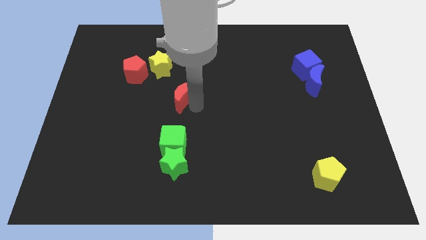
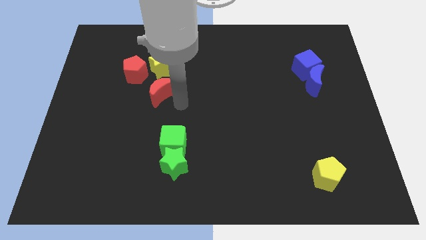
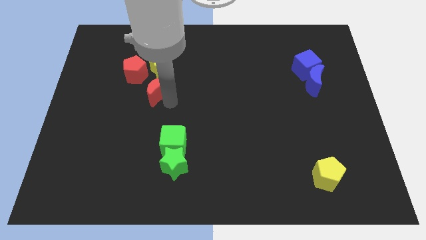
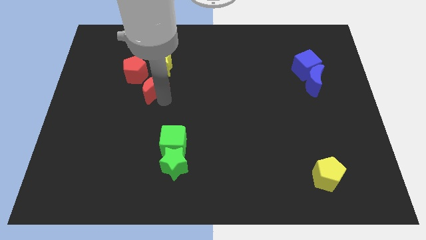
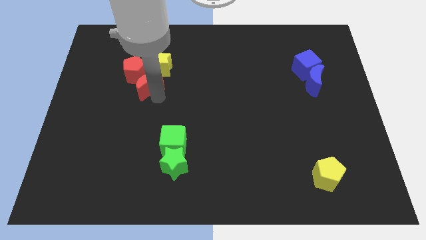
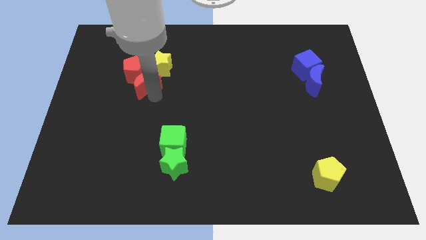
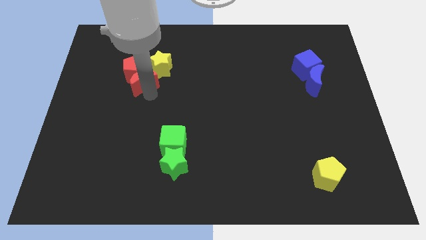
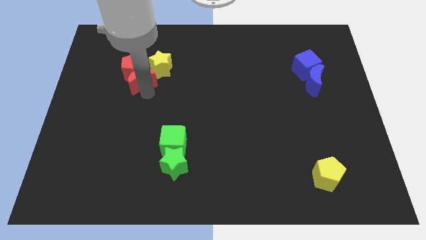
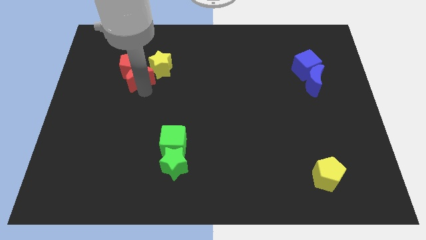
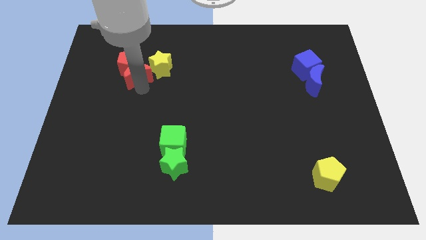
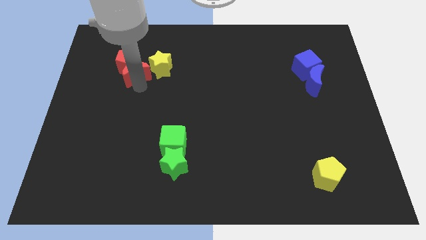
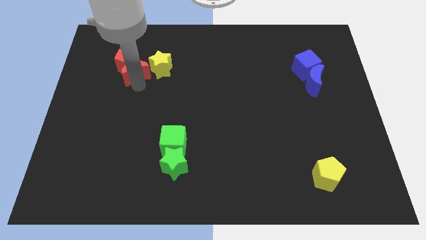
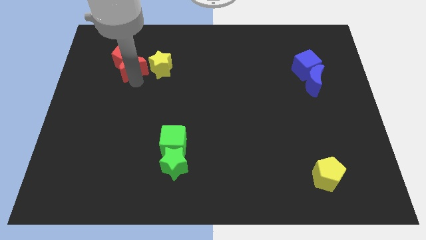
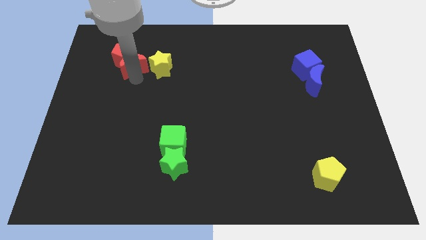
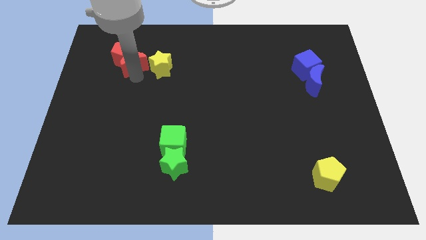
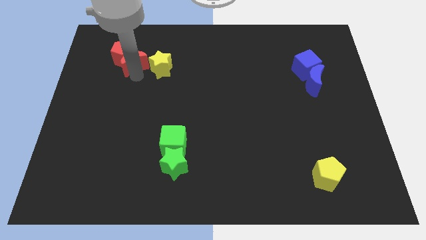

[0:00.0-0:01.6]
move the red crescent into the red pentagon

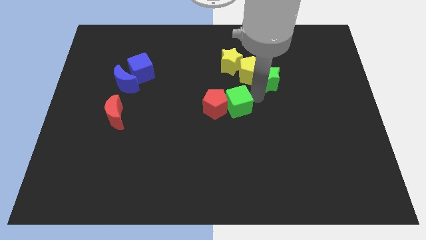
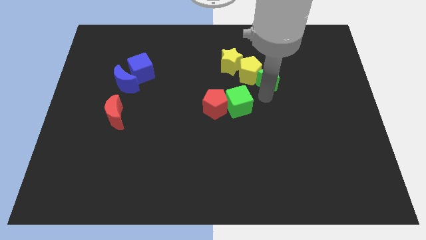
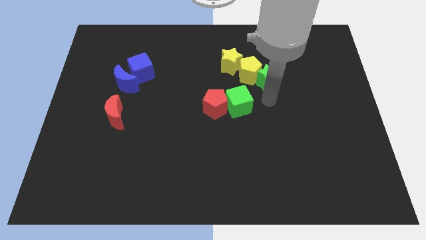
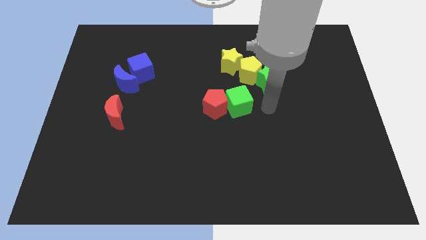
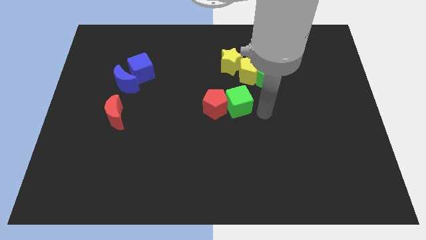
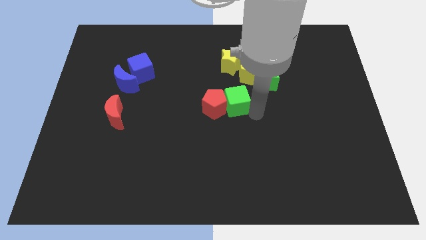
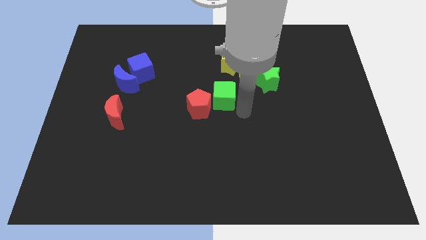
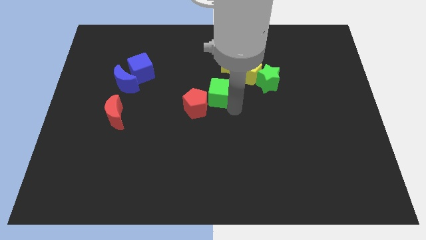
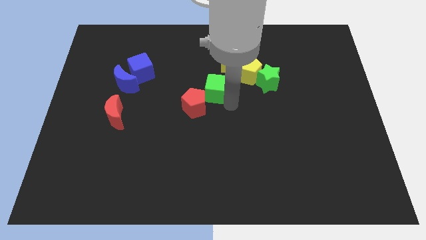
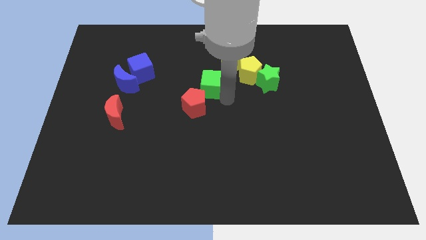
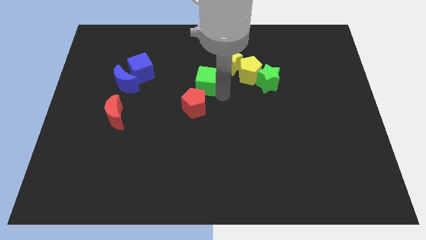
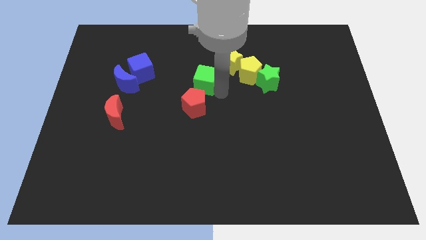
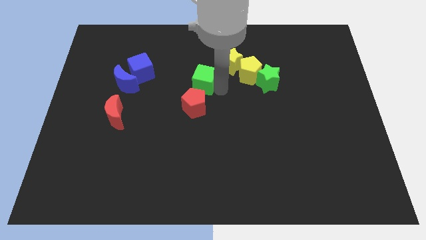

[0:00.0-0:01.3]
place the green cube in between the yellow star and red pentagon

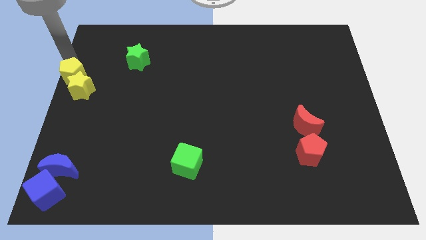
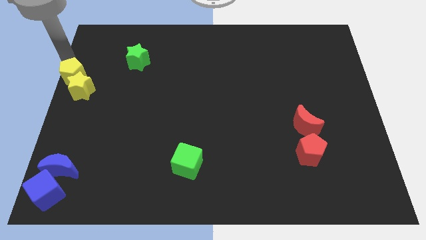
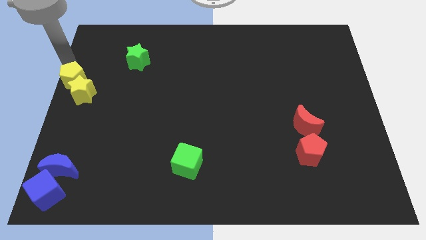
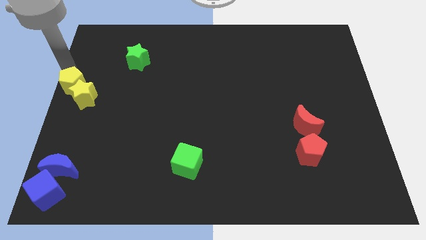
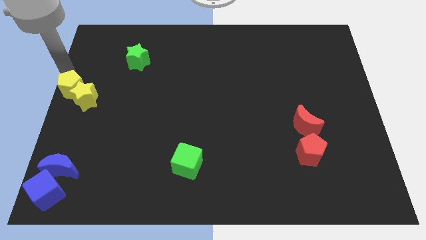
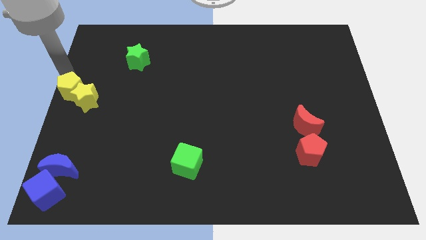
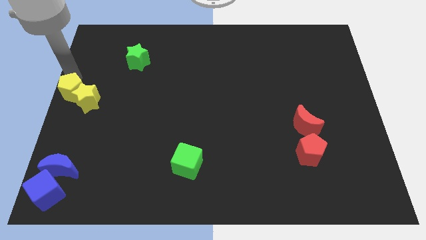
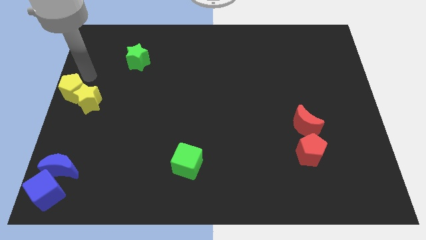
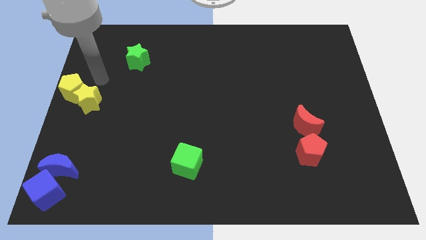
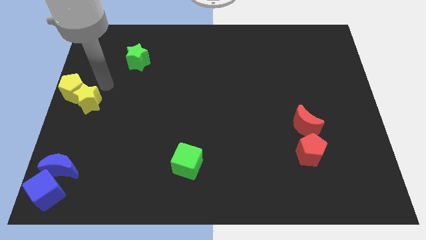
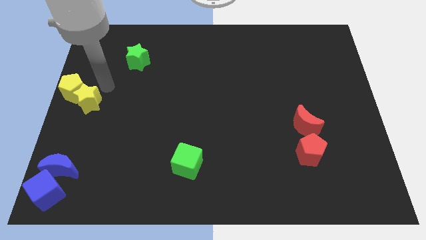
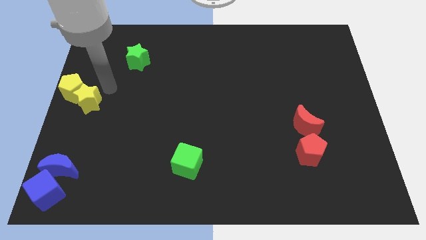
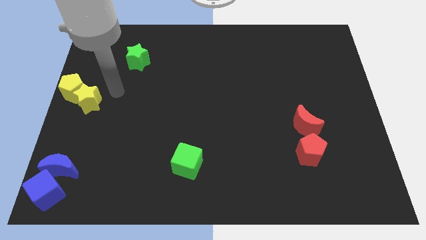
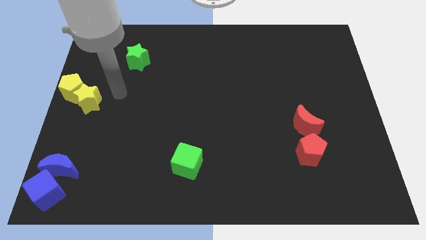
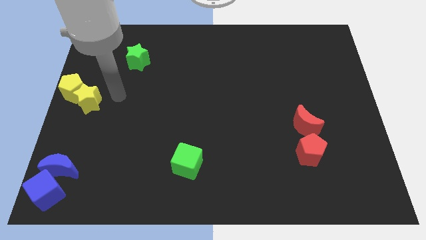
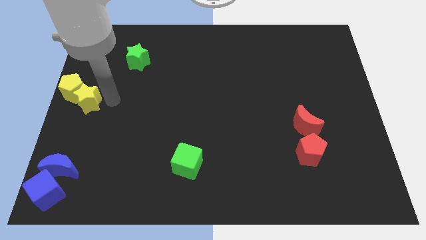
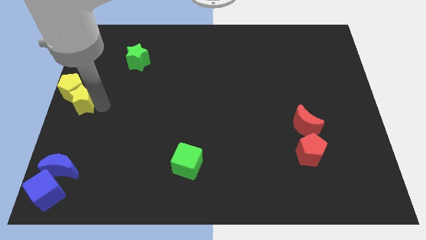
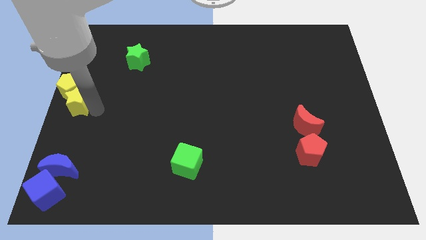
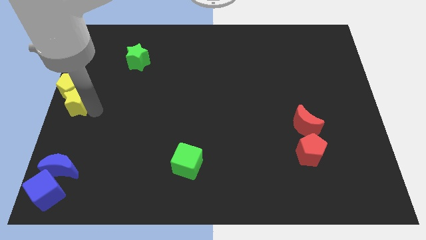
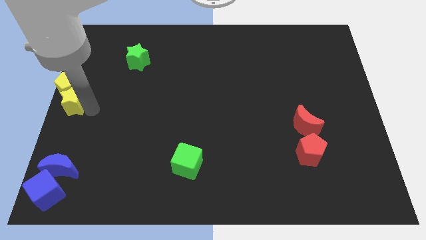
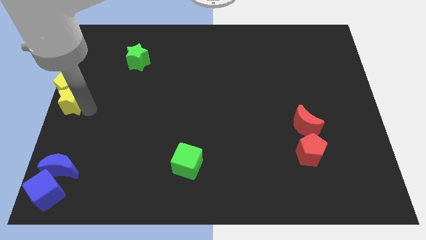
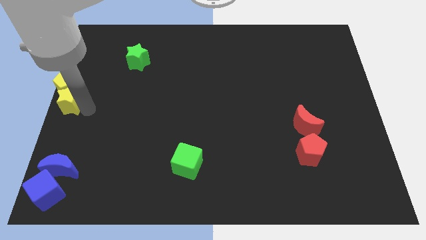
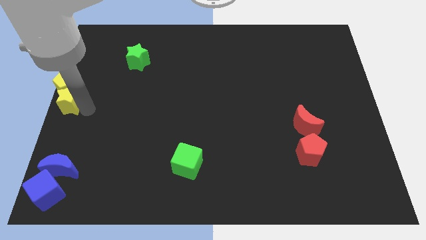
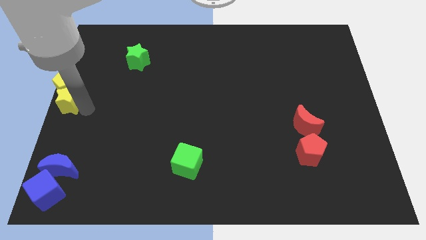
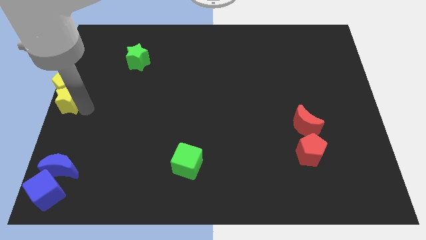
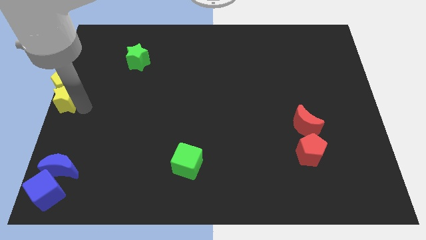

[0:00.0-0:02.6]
push the yellow pentagonyellow star towards the center left of the board

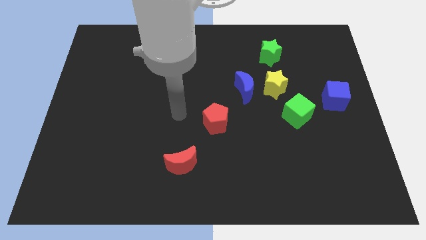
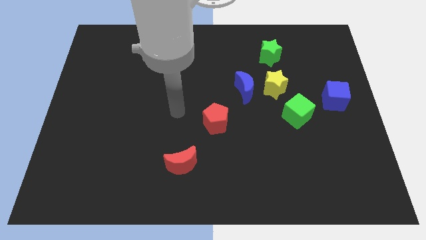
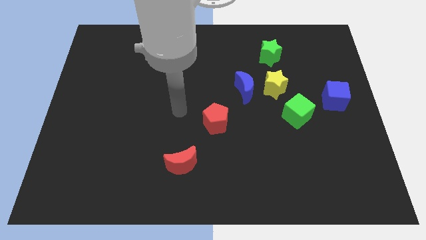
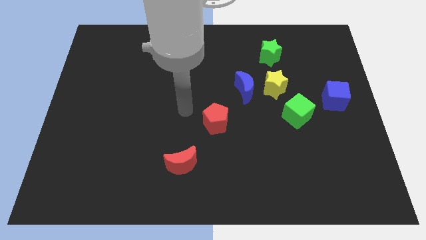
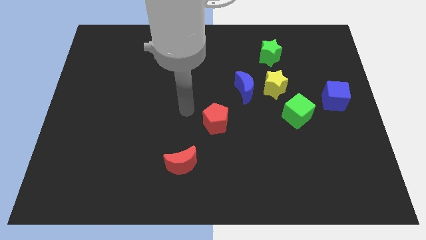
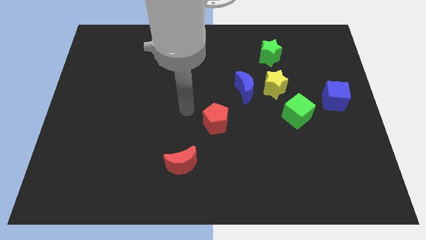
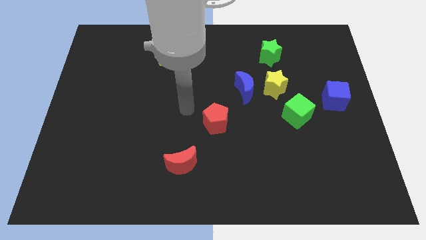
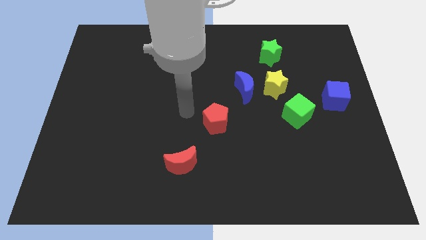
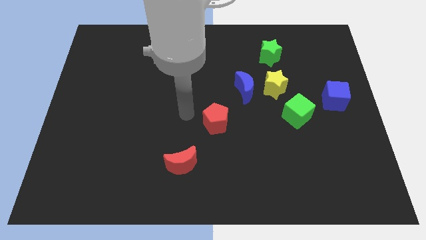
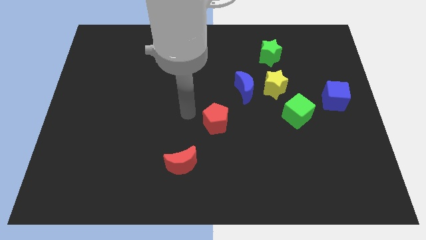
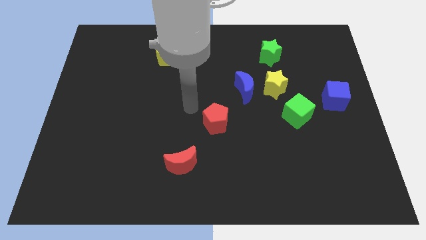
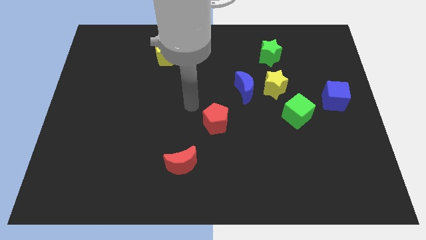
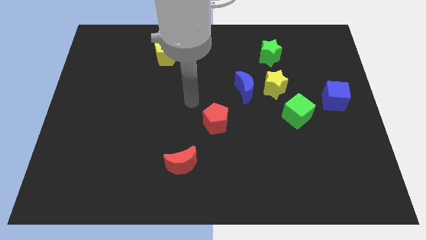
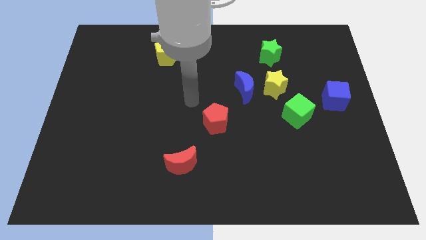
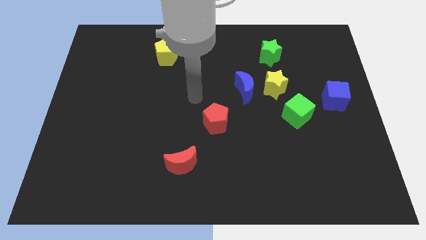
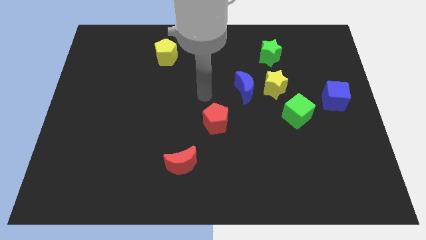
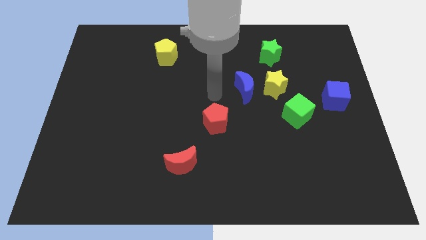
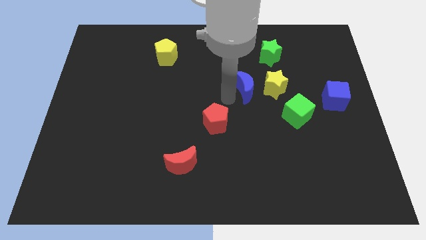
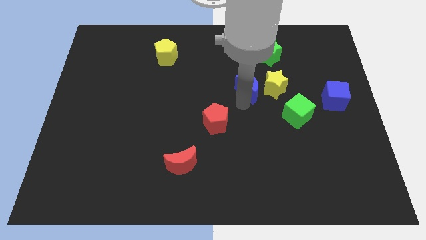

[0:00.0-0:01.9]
tap the blue crescent

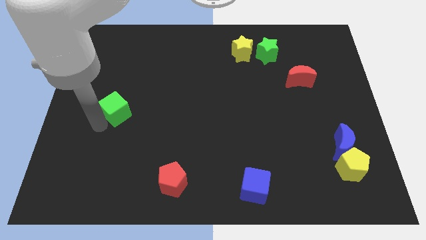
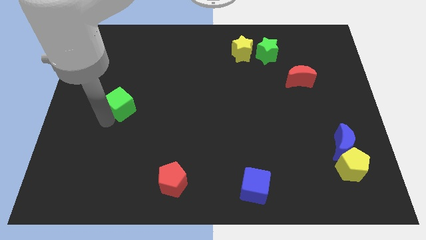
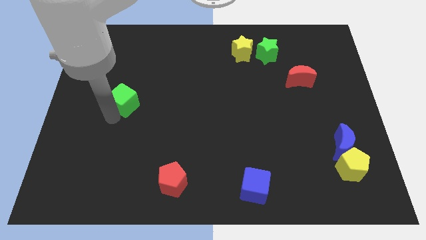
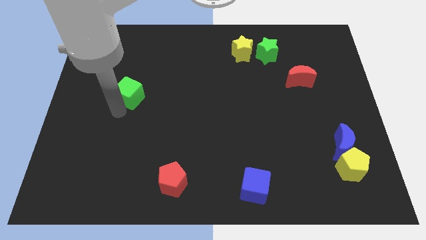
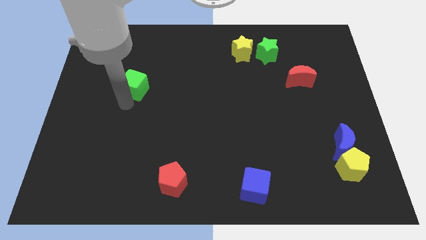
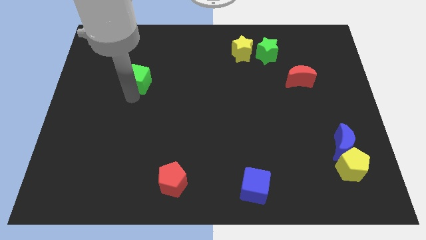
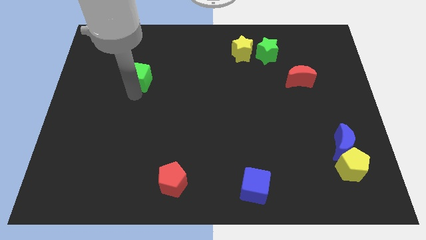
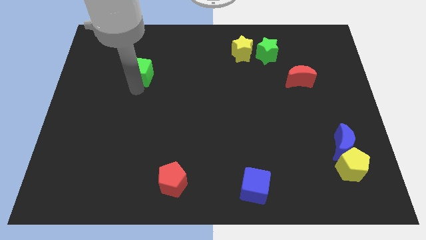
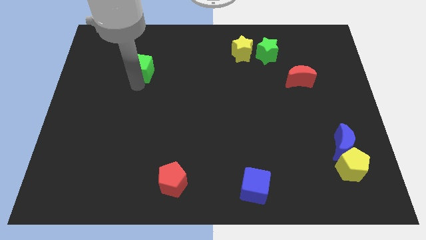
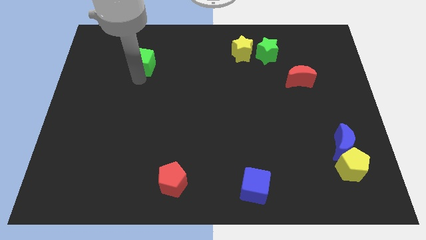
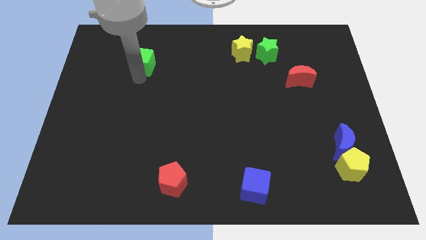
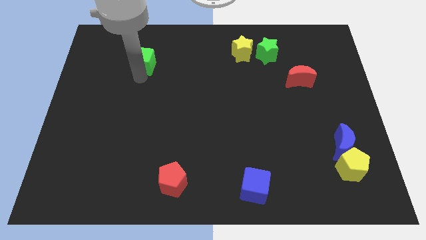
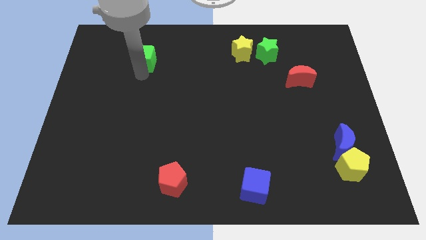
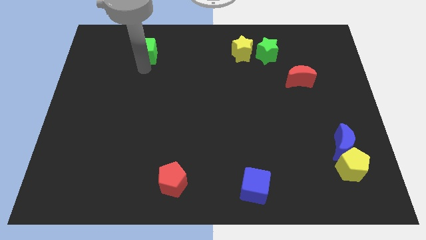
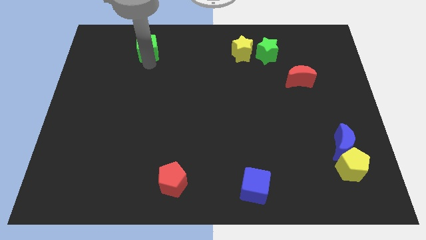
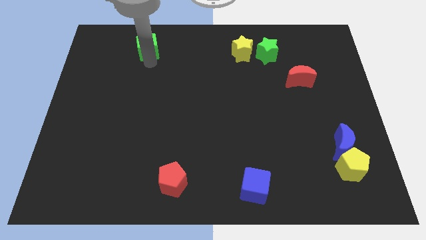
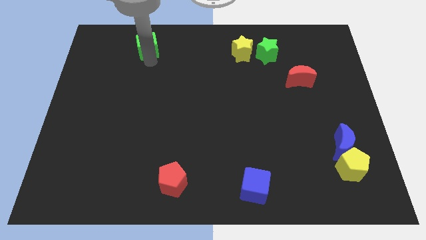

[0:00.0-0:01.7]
move green cube slightly to the top of the board
